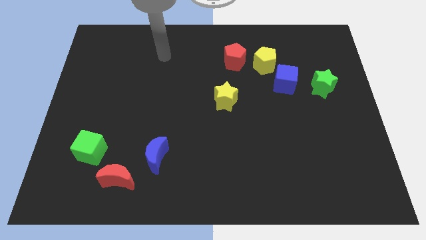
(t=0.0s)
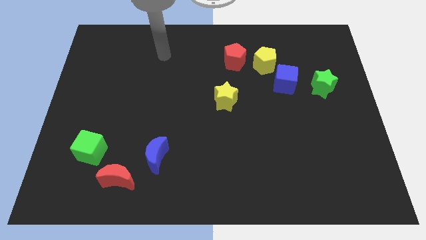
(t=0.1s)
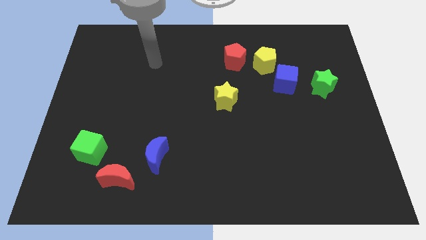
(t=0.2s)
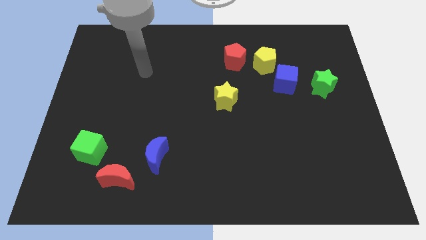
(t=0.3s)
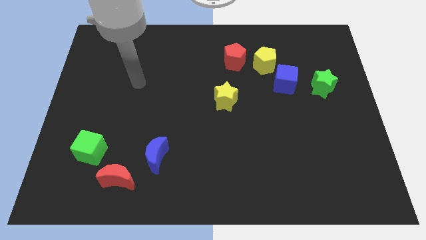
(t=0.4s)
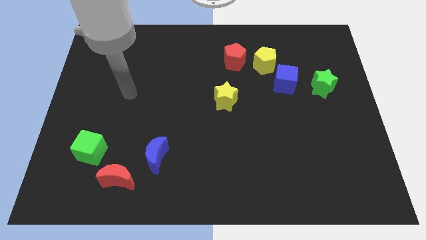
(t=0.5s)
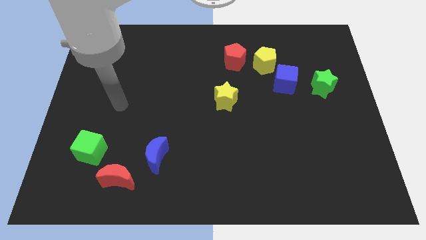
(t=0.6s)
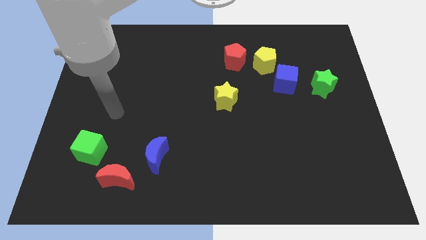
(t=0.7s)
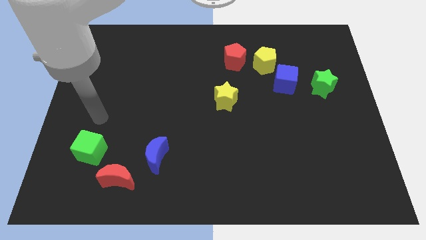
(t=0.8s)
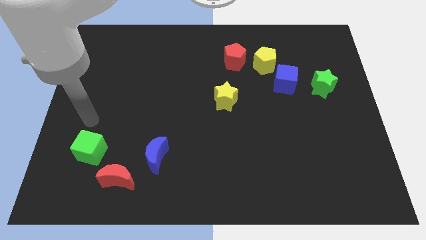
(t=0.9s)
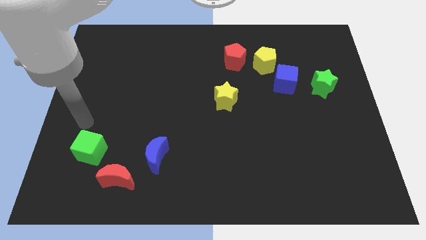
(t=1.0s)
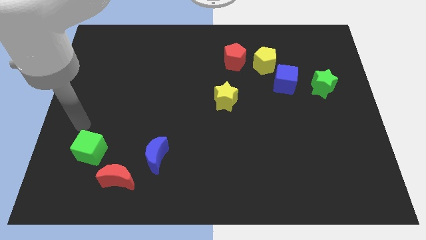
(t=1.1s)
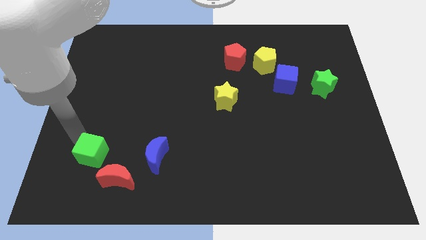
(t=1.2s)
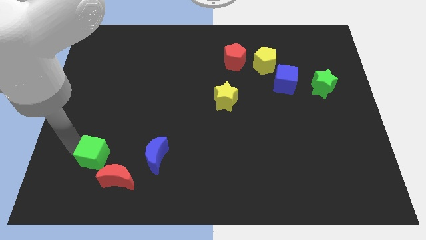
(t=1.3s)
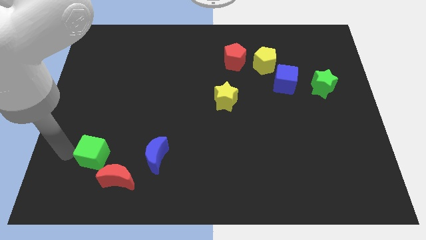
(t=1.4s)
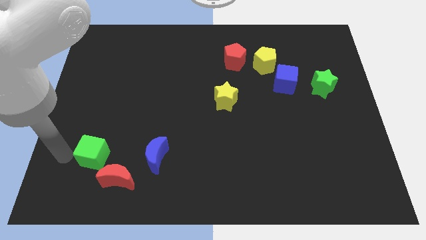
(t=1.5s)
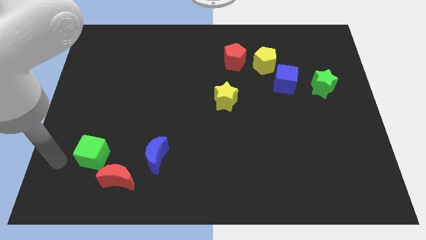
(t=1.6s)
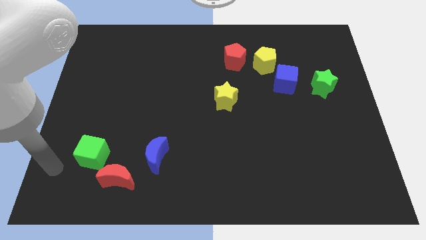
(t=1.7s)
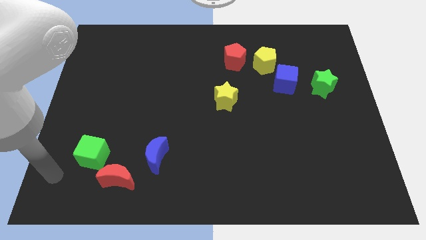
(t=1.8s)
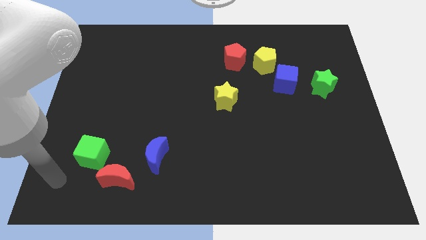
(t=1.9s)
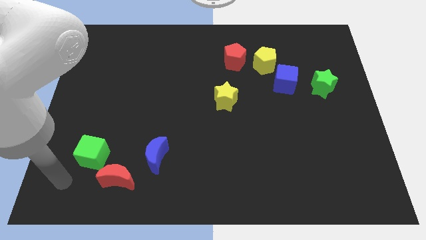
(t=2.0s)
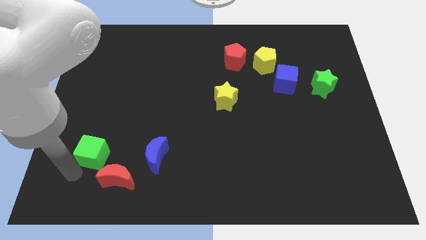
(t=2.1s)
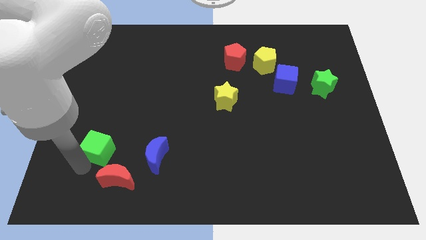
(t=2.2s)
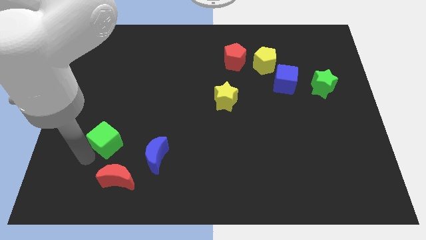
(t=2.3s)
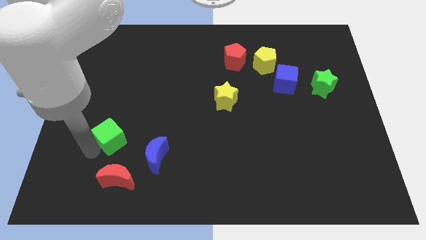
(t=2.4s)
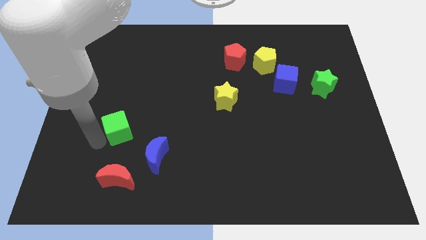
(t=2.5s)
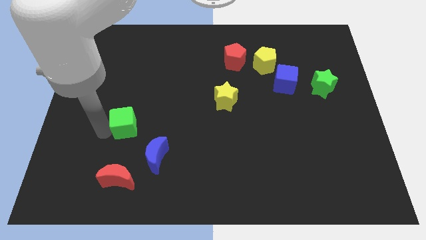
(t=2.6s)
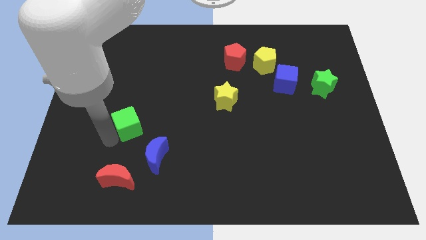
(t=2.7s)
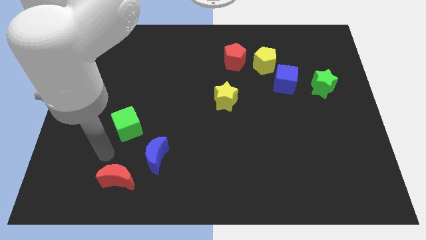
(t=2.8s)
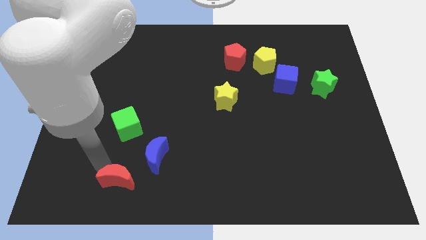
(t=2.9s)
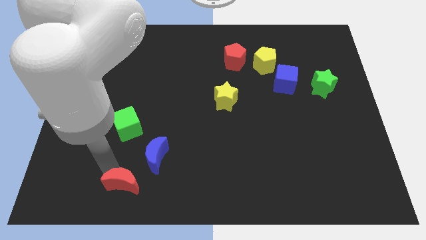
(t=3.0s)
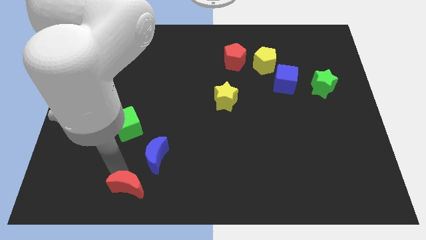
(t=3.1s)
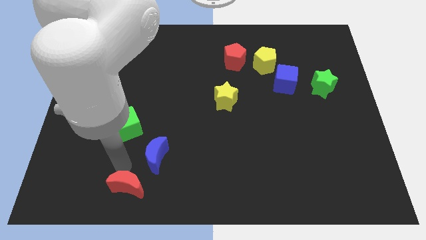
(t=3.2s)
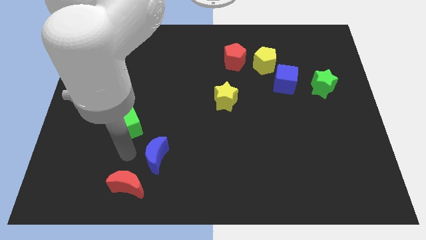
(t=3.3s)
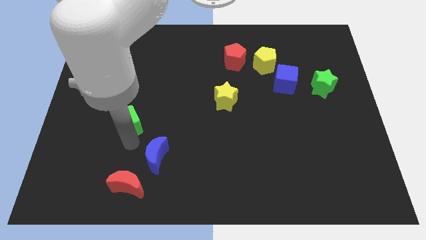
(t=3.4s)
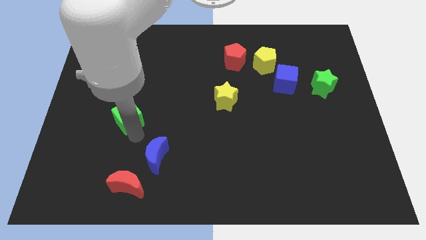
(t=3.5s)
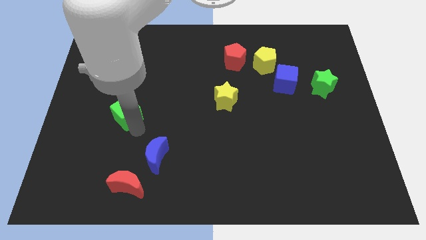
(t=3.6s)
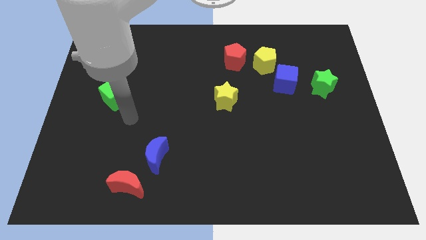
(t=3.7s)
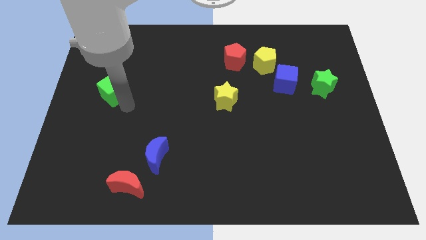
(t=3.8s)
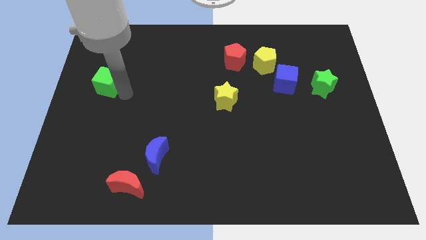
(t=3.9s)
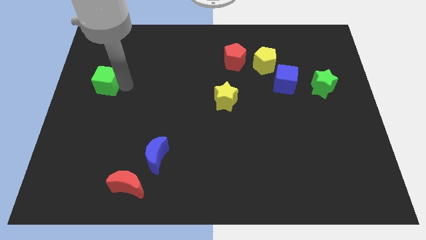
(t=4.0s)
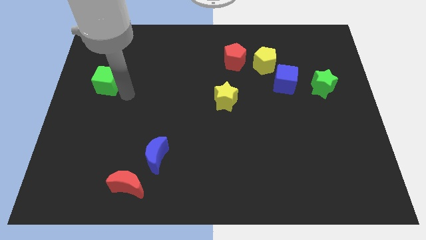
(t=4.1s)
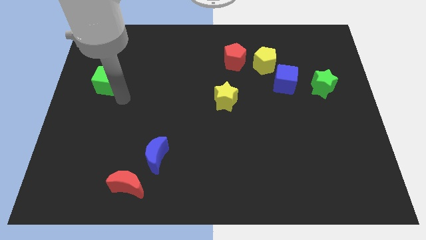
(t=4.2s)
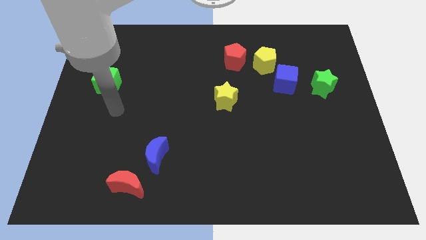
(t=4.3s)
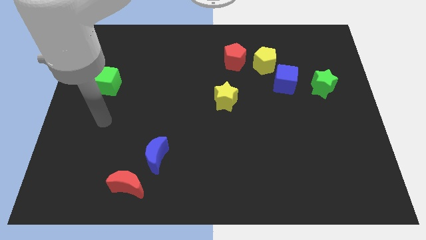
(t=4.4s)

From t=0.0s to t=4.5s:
separate the green cube and red moon

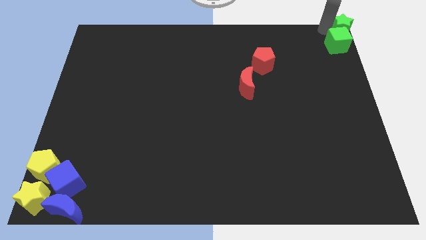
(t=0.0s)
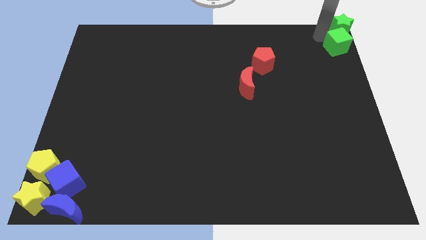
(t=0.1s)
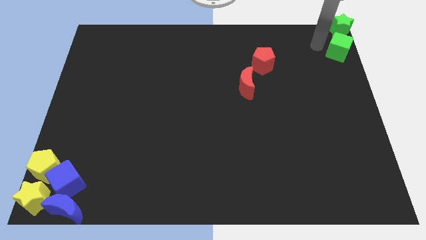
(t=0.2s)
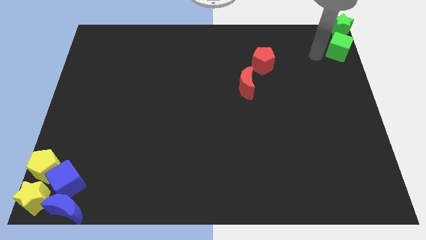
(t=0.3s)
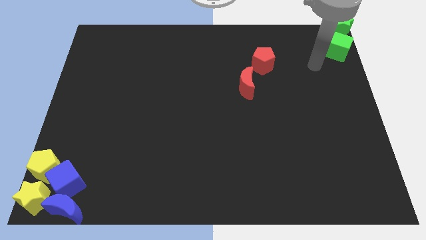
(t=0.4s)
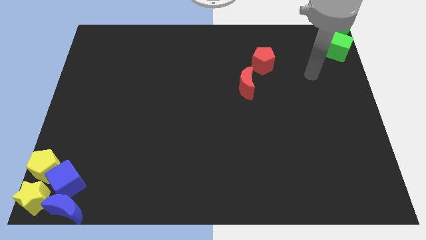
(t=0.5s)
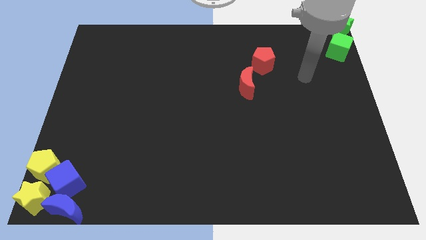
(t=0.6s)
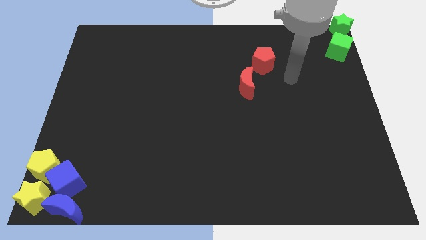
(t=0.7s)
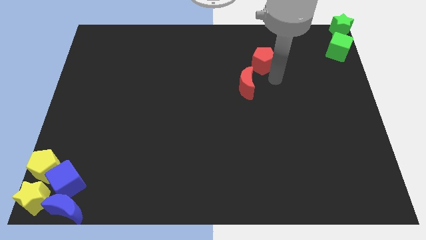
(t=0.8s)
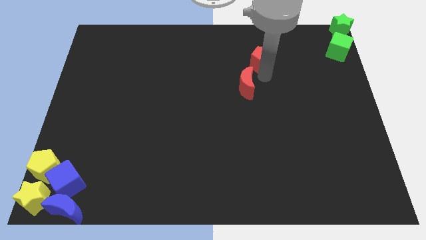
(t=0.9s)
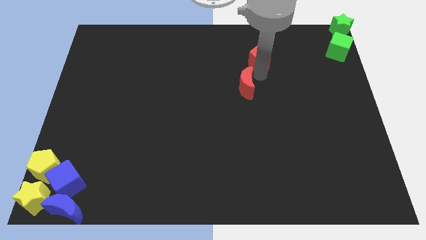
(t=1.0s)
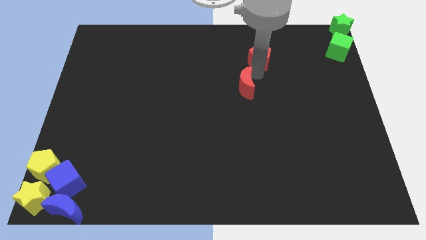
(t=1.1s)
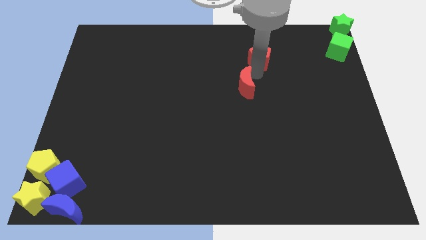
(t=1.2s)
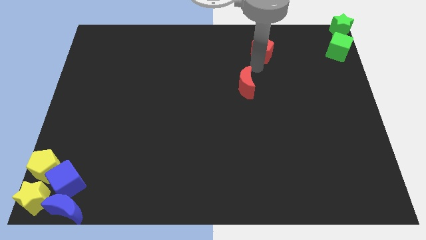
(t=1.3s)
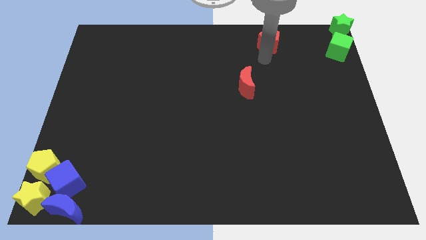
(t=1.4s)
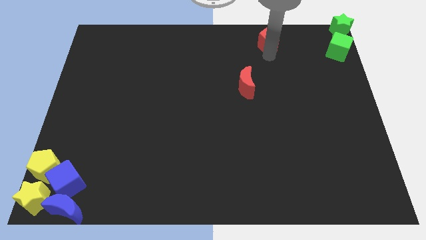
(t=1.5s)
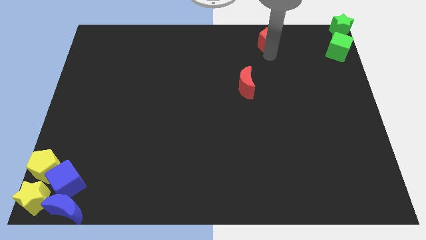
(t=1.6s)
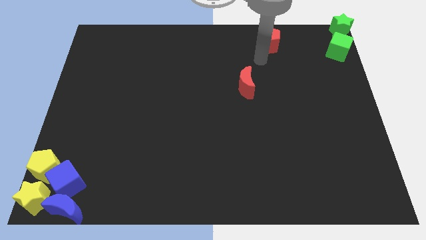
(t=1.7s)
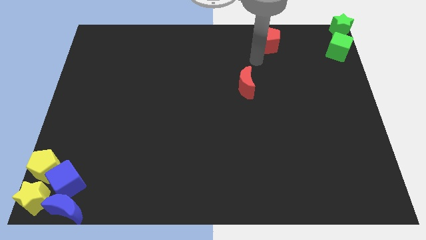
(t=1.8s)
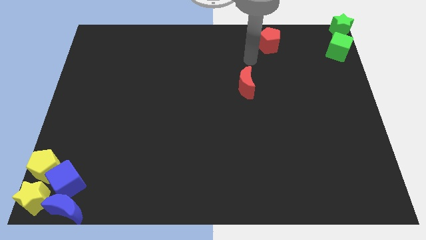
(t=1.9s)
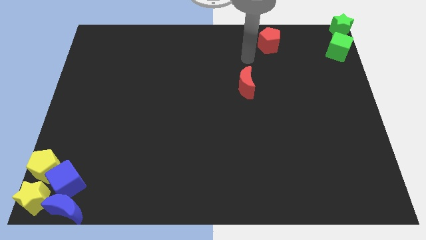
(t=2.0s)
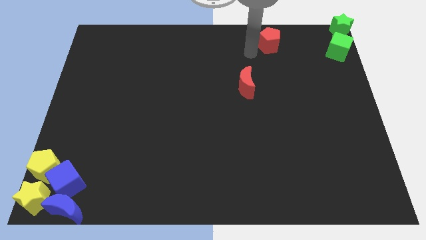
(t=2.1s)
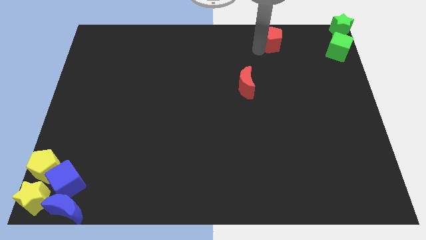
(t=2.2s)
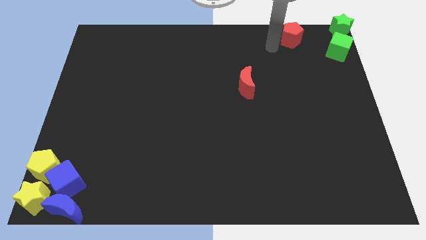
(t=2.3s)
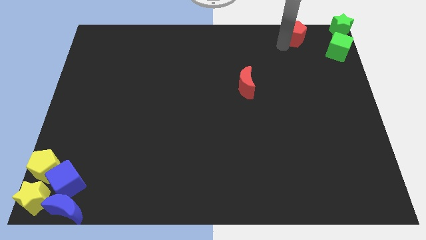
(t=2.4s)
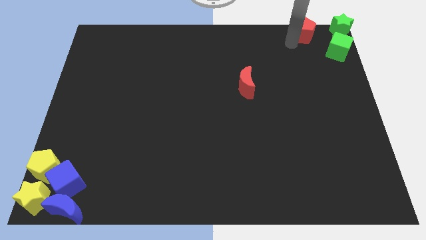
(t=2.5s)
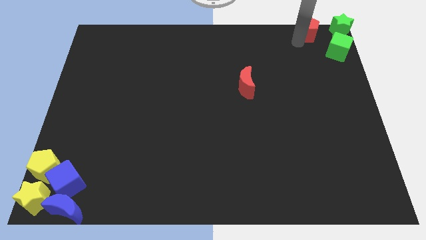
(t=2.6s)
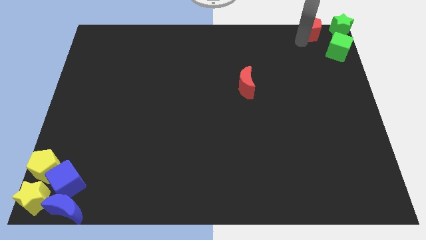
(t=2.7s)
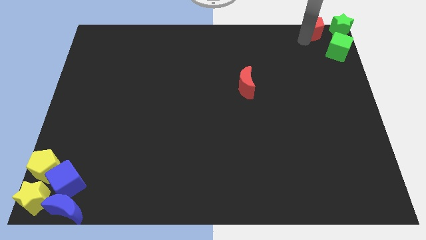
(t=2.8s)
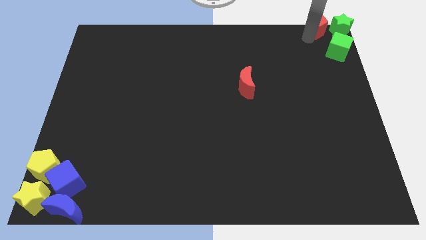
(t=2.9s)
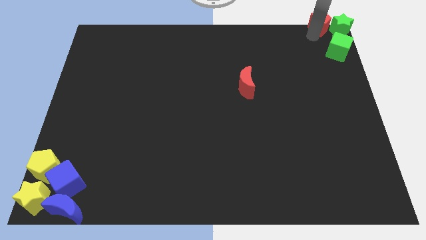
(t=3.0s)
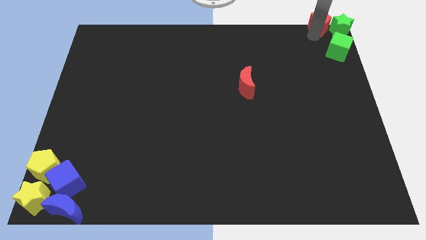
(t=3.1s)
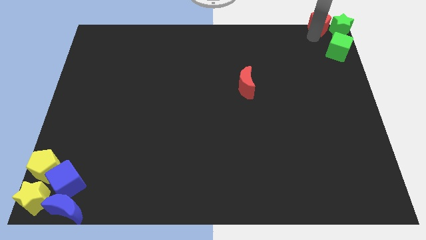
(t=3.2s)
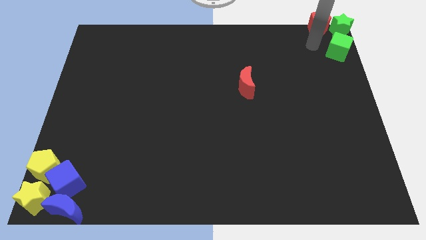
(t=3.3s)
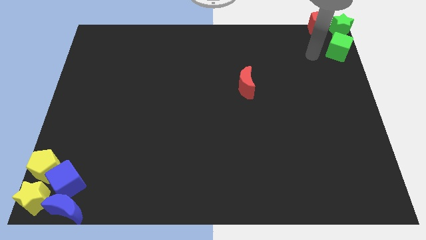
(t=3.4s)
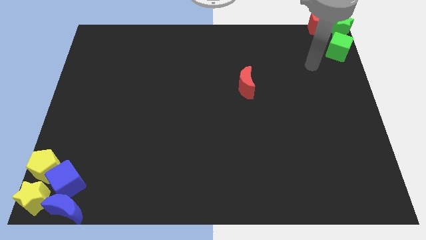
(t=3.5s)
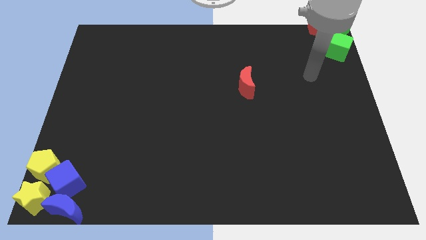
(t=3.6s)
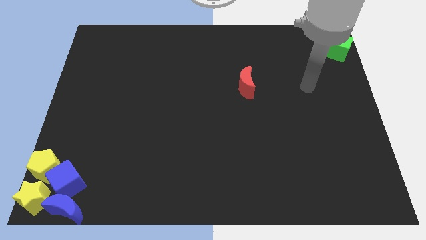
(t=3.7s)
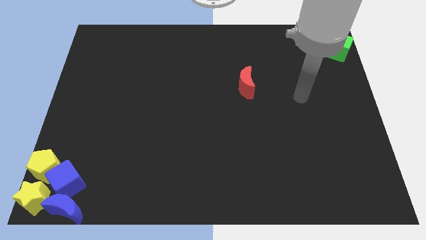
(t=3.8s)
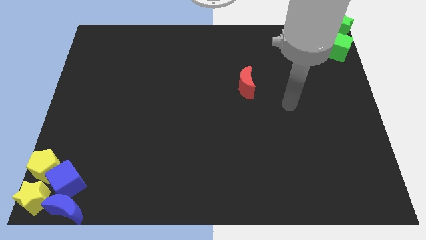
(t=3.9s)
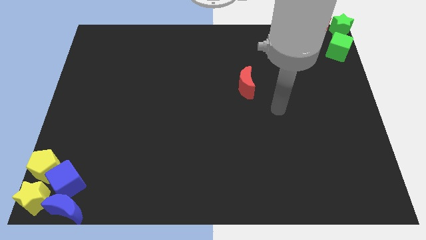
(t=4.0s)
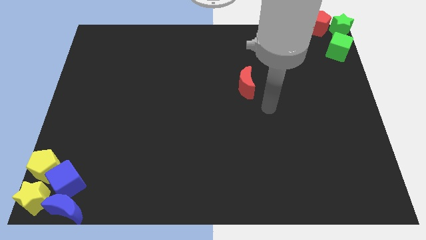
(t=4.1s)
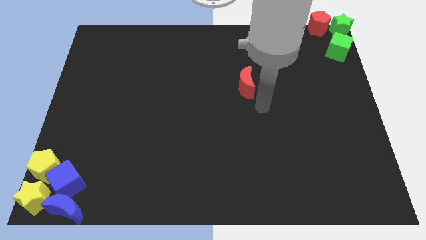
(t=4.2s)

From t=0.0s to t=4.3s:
put the red pentagon horizontally on the left side of the green star

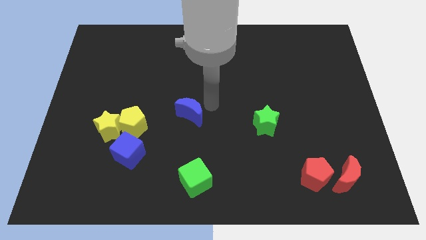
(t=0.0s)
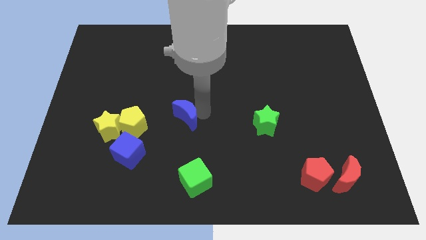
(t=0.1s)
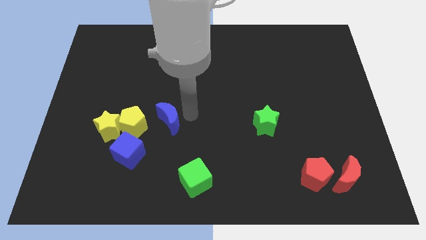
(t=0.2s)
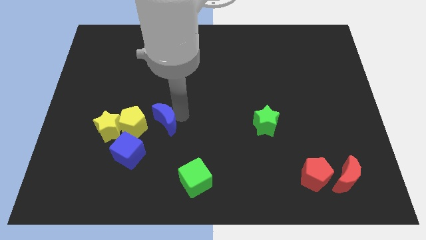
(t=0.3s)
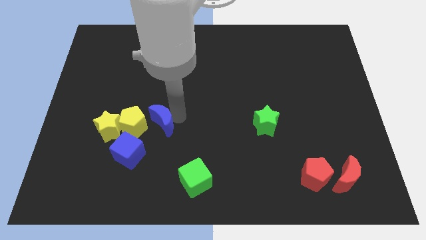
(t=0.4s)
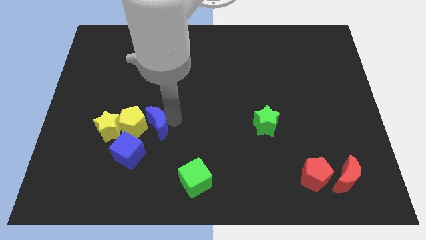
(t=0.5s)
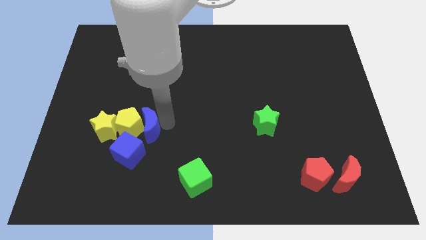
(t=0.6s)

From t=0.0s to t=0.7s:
push the blue crescent into yellow pentagon
